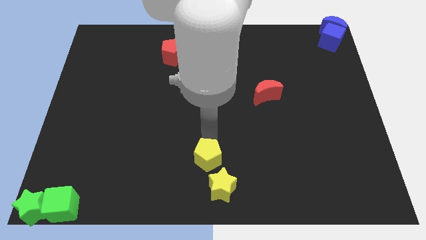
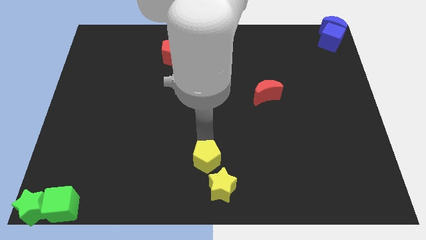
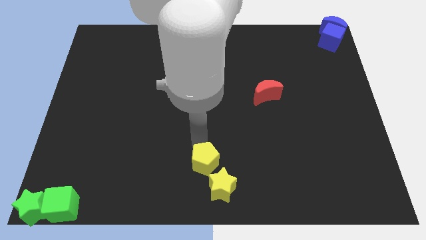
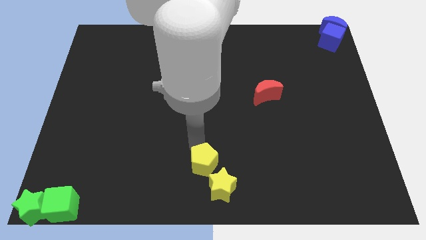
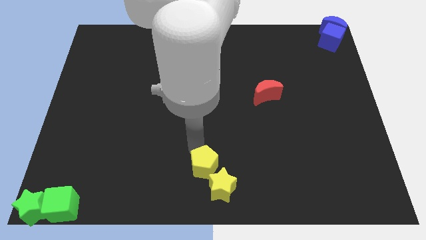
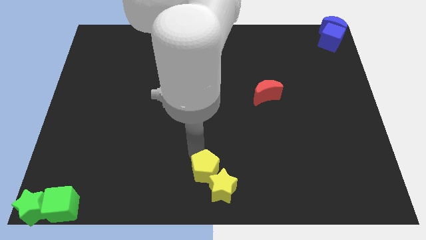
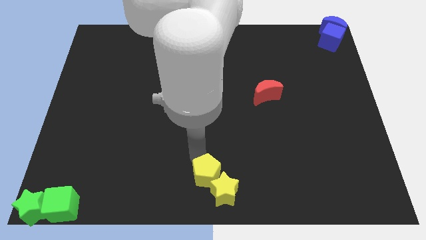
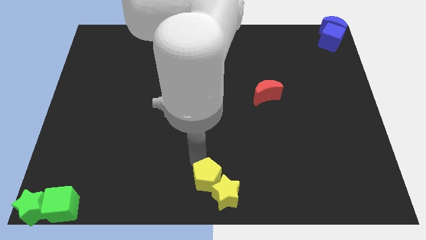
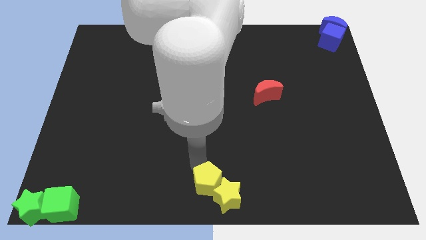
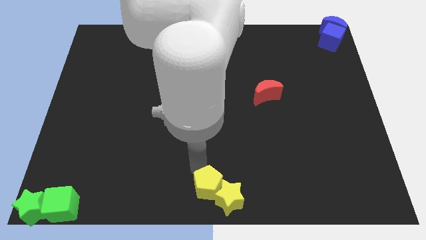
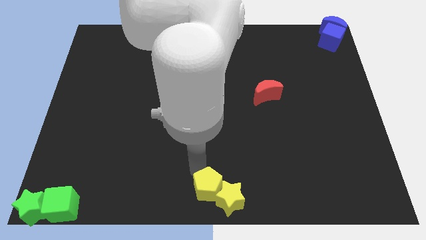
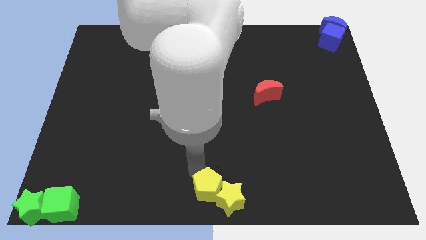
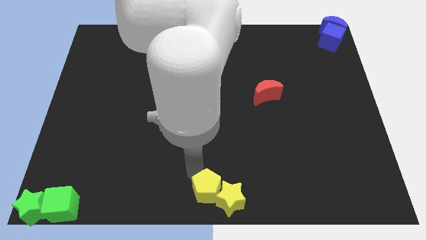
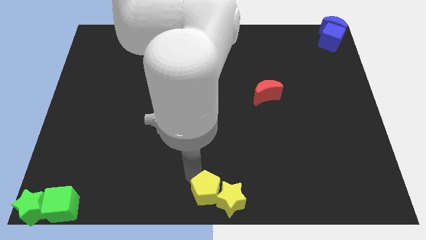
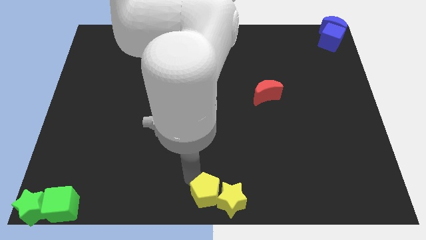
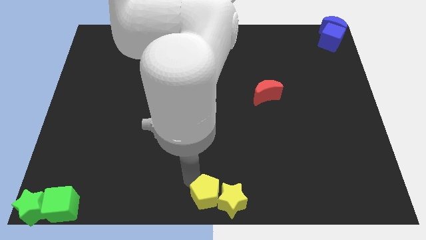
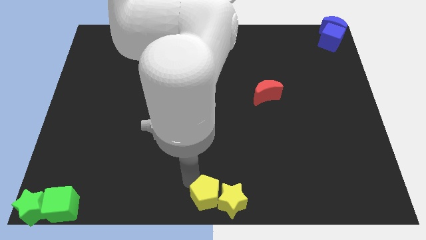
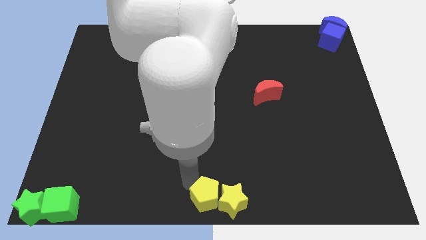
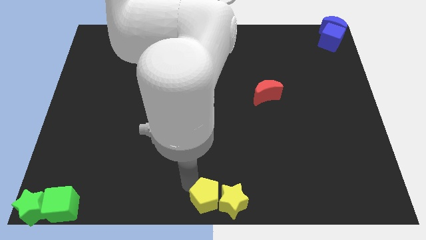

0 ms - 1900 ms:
push the yellow pentagon into the yellow star

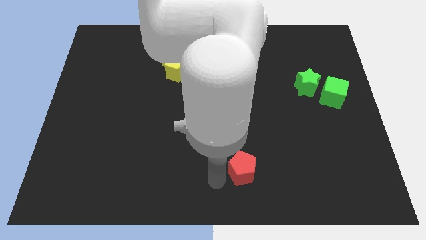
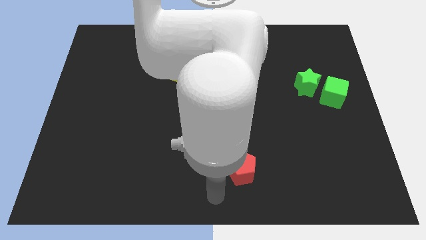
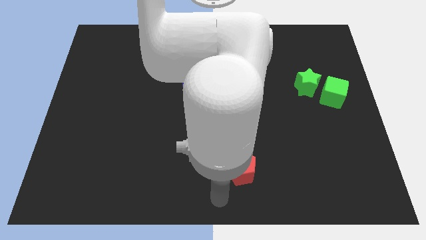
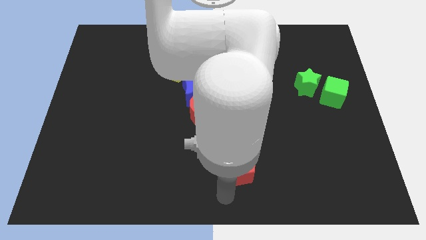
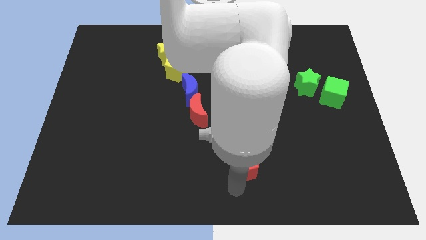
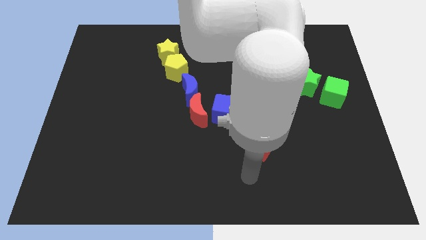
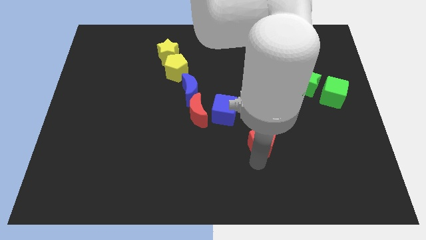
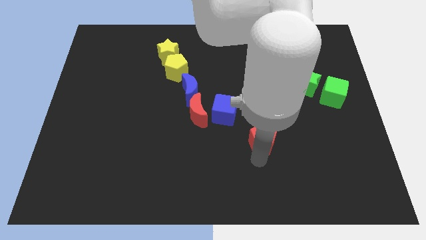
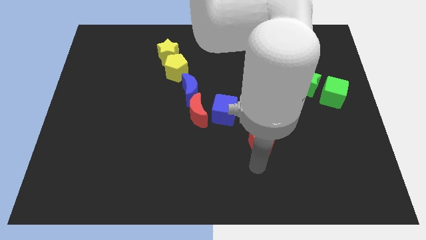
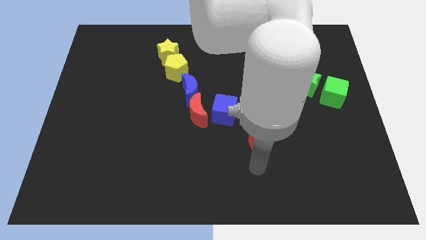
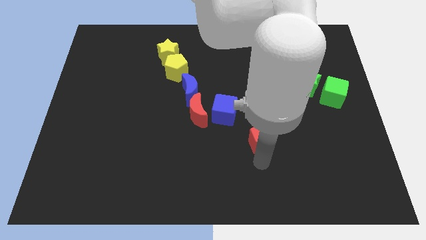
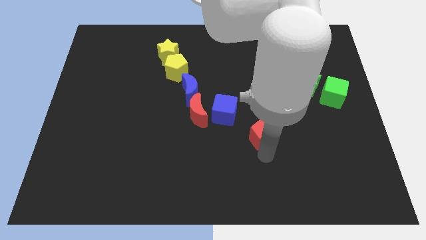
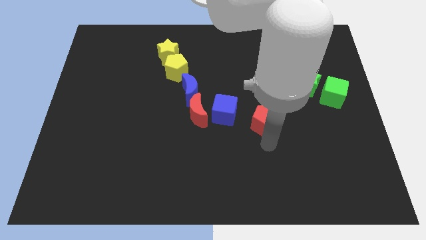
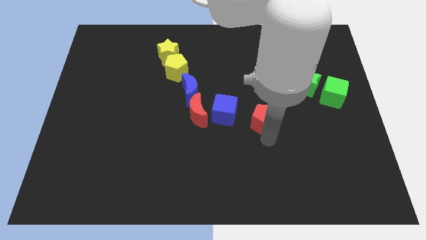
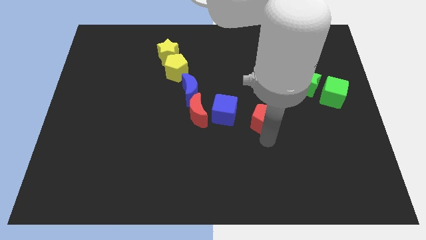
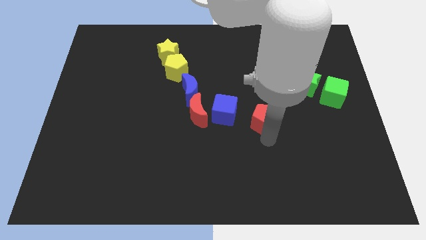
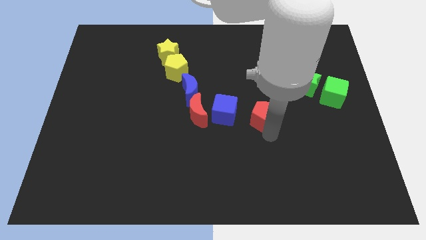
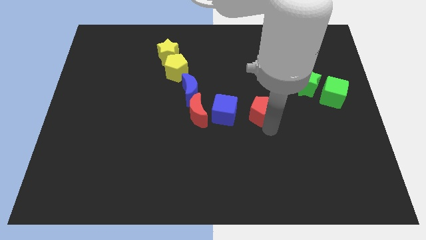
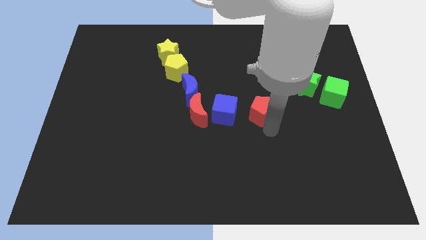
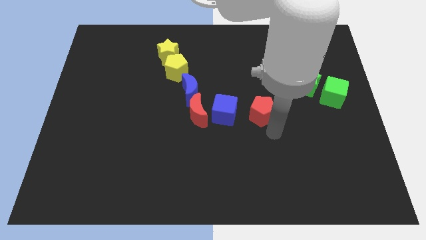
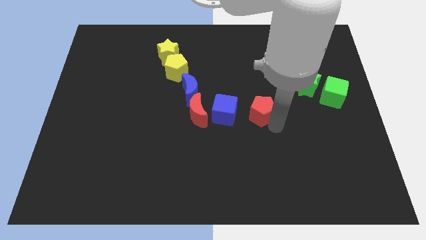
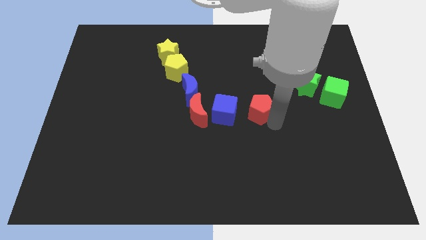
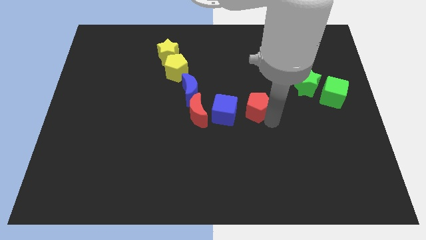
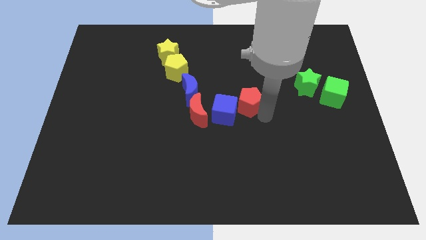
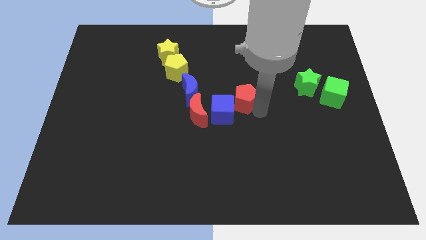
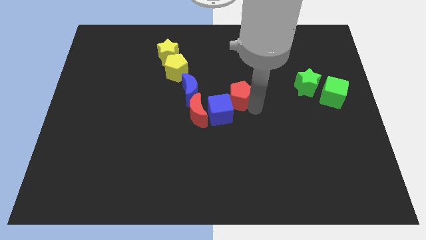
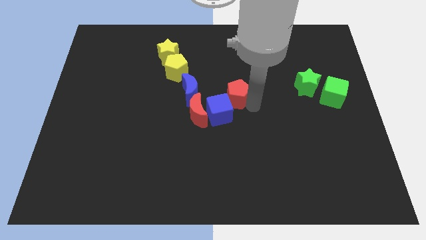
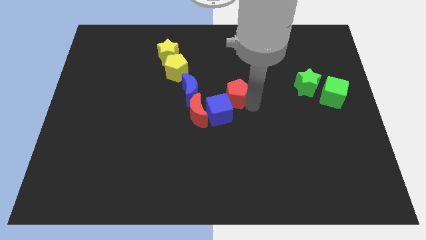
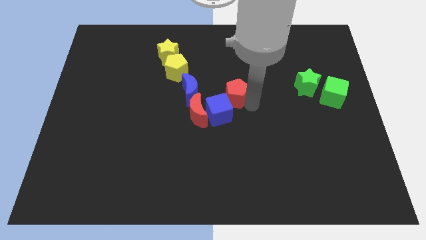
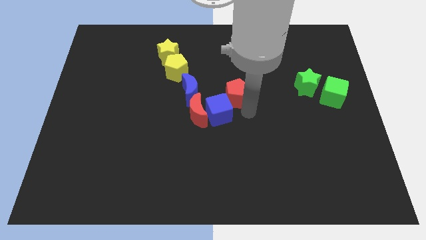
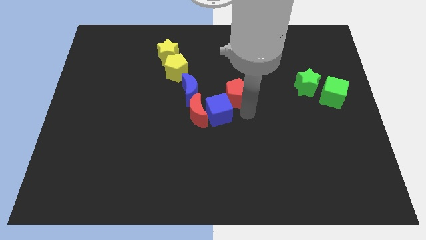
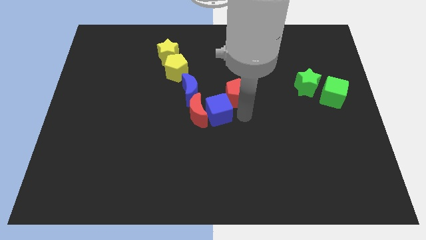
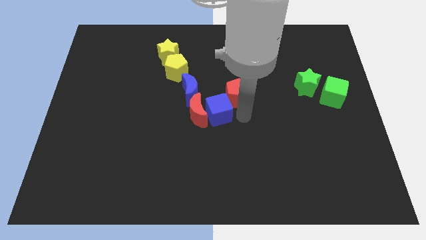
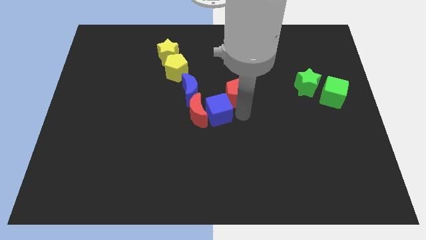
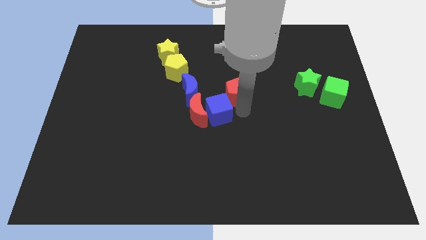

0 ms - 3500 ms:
move the red pentagon into the blue cube

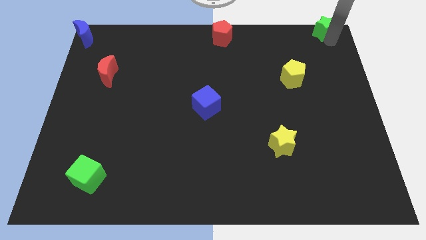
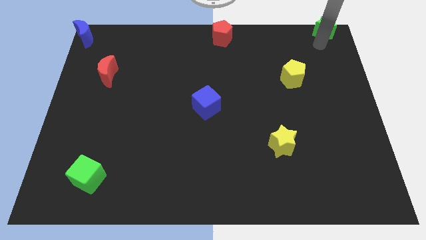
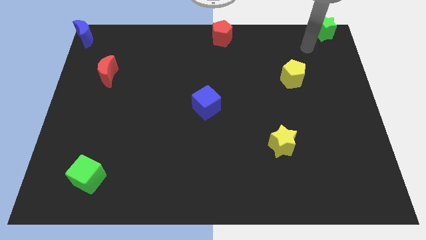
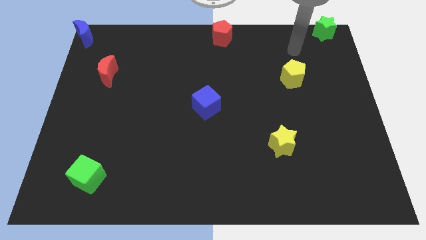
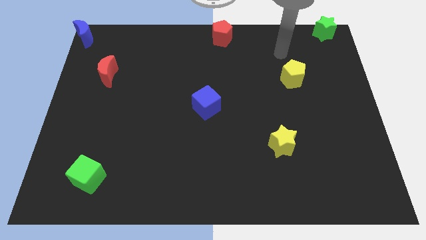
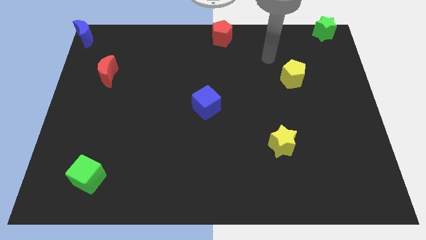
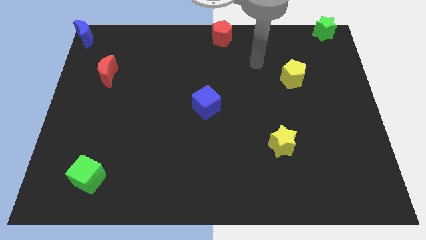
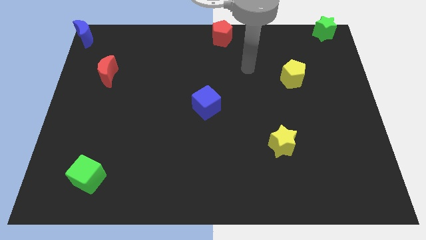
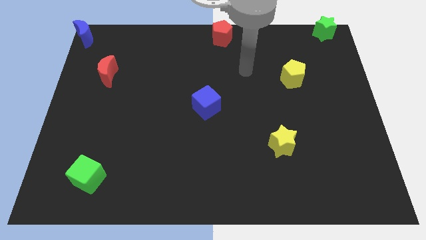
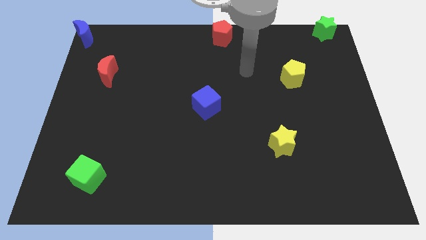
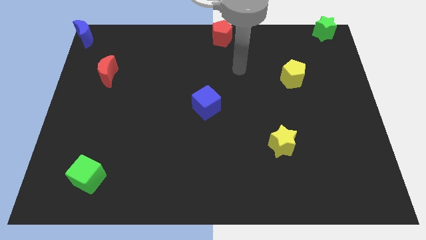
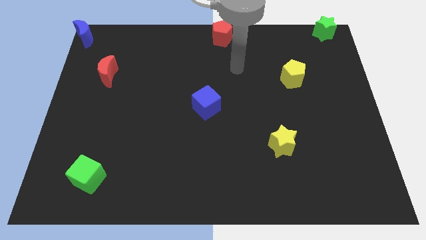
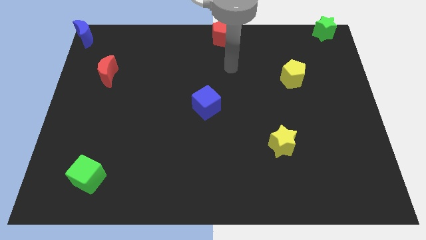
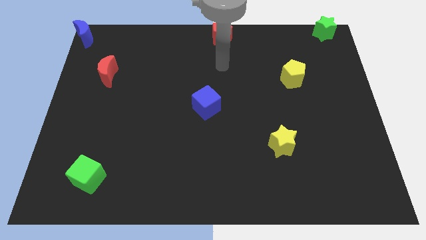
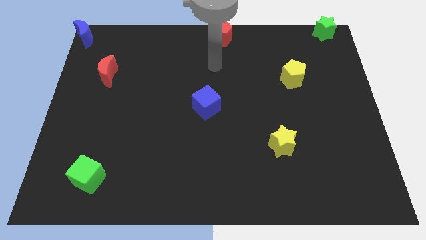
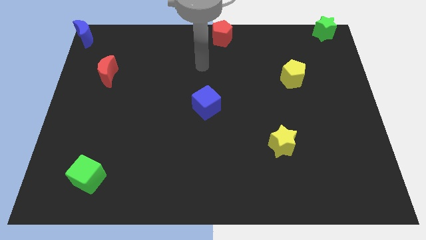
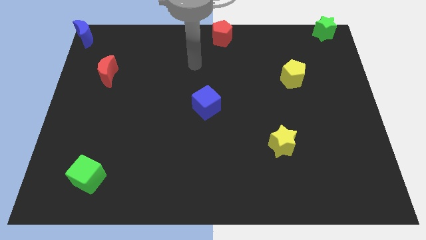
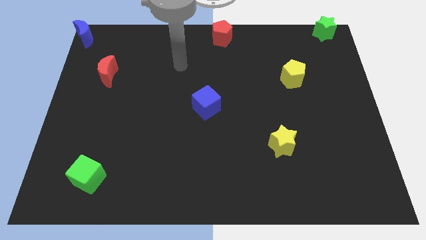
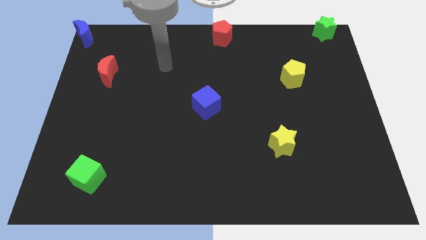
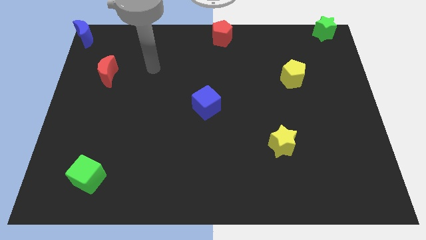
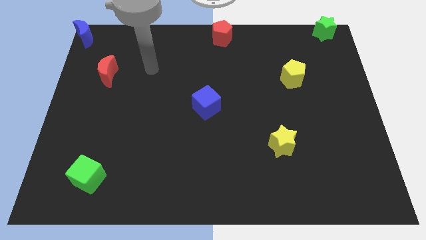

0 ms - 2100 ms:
point your arm towards the right of the red moon

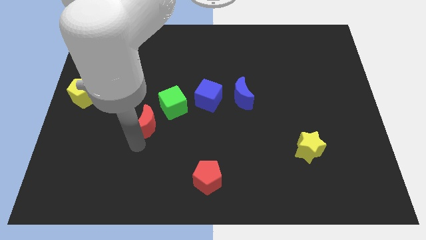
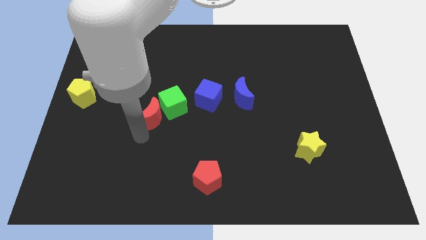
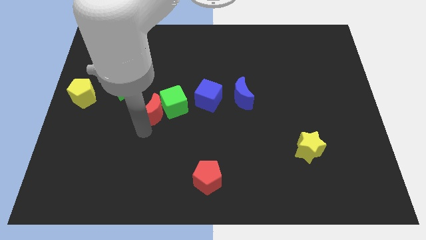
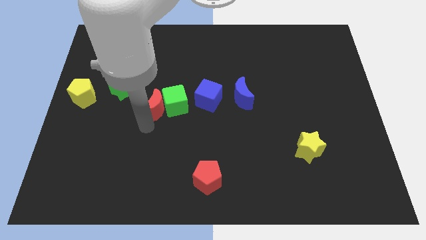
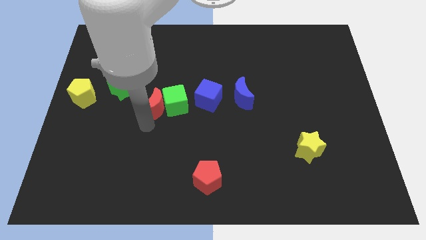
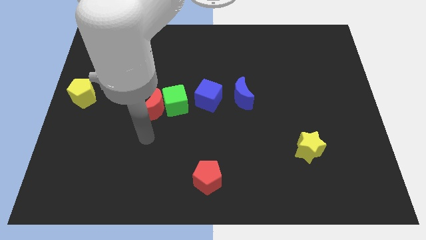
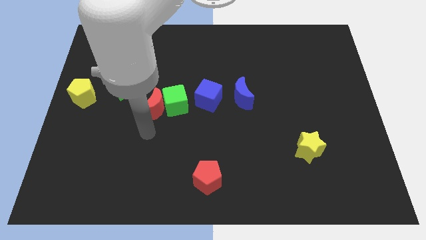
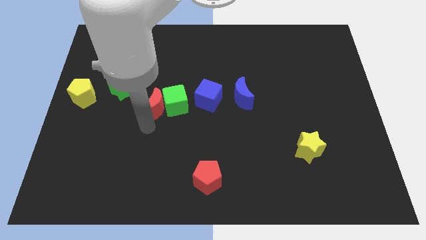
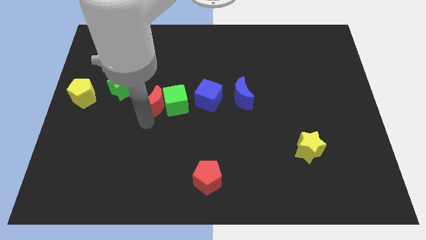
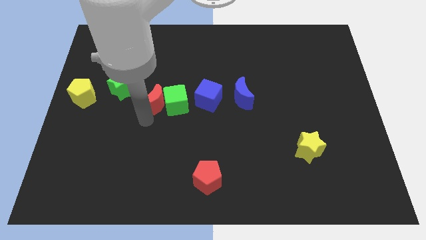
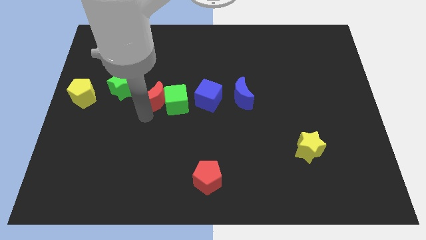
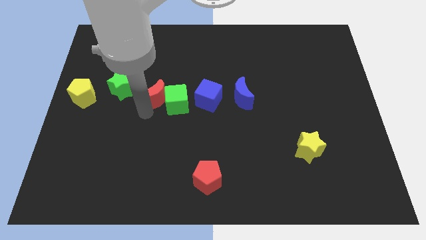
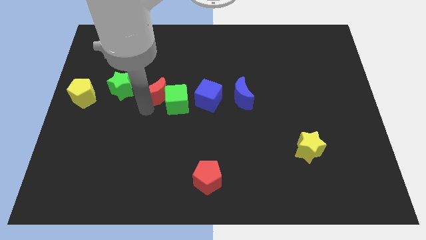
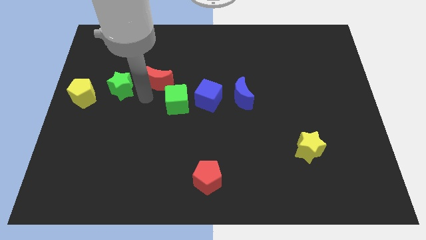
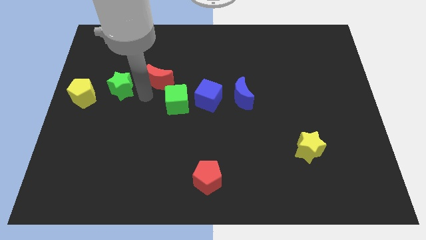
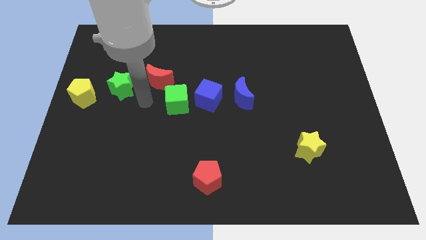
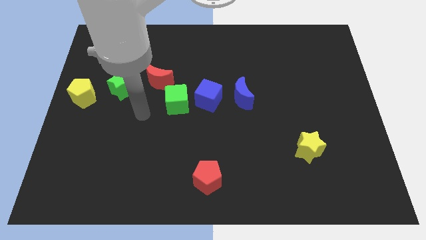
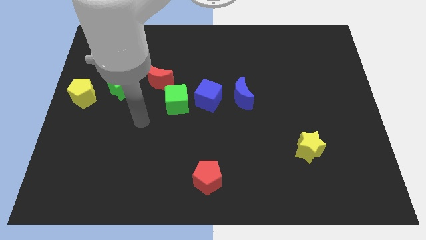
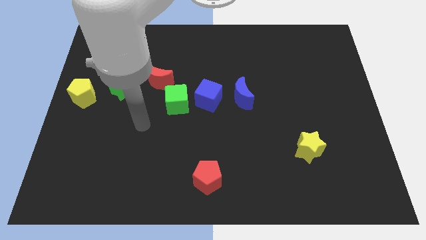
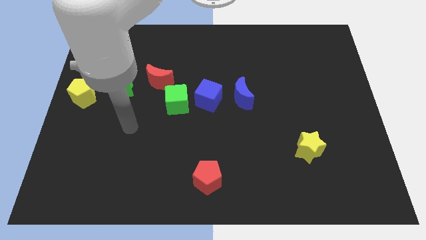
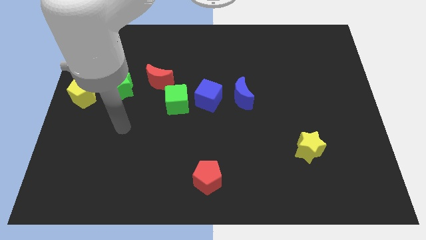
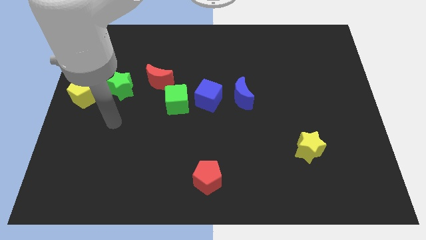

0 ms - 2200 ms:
push the red moon upwards
